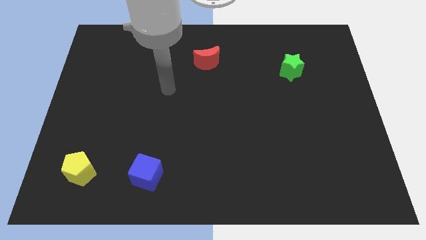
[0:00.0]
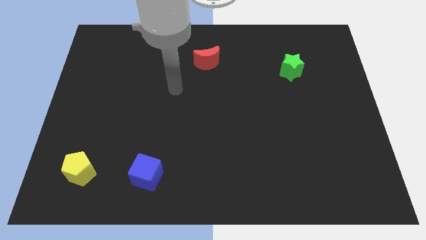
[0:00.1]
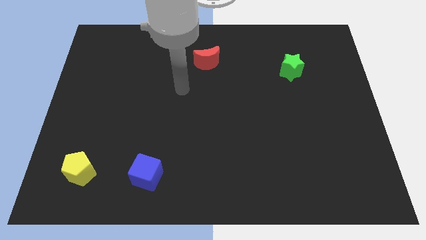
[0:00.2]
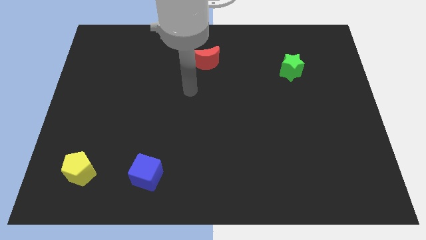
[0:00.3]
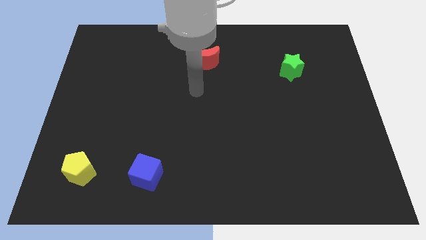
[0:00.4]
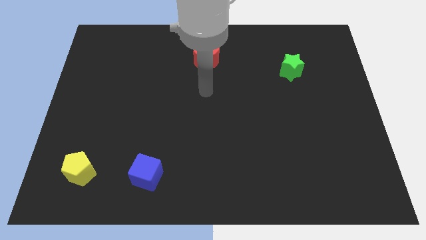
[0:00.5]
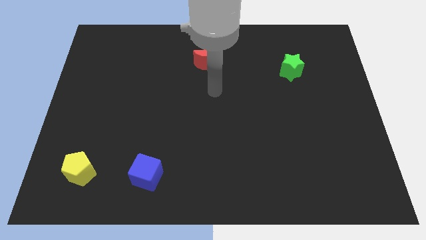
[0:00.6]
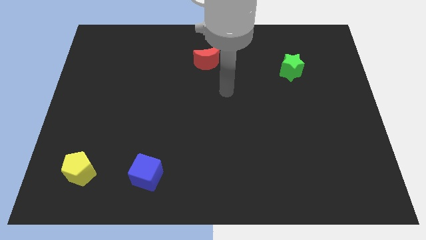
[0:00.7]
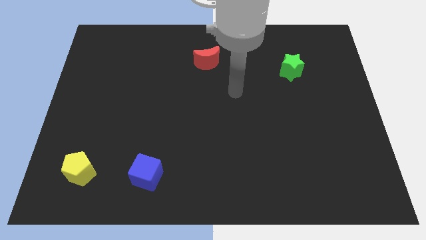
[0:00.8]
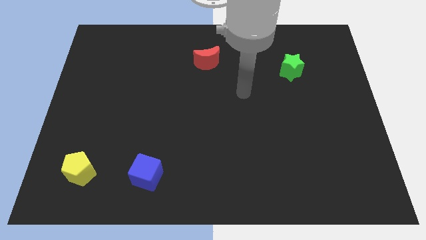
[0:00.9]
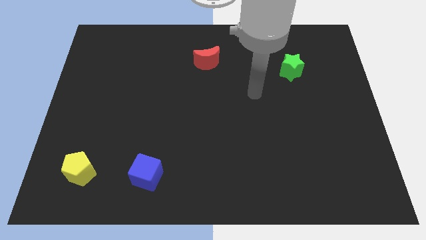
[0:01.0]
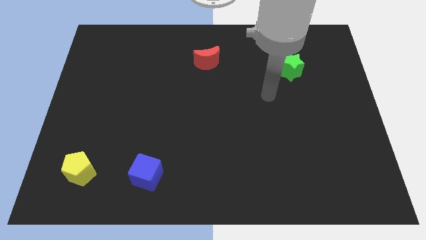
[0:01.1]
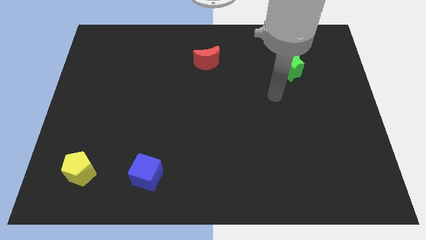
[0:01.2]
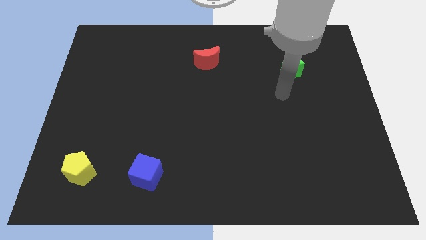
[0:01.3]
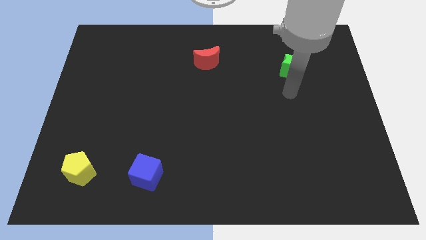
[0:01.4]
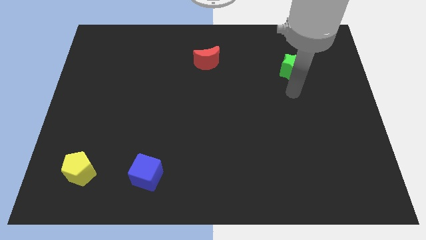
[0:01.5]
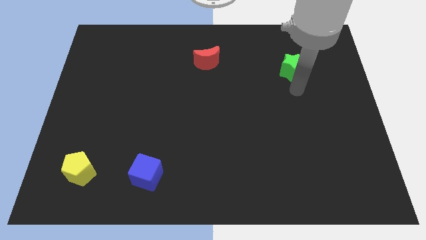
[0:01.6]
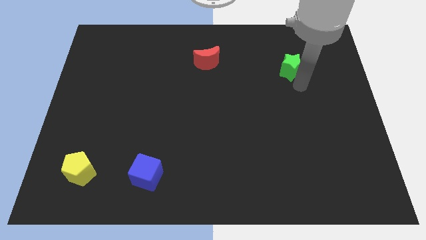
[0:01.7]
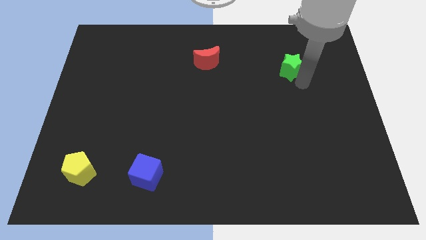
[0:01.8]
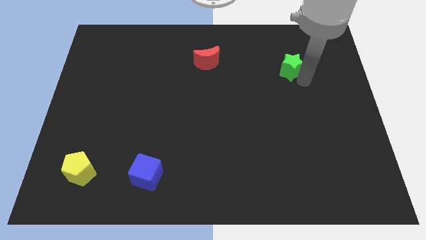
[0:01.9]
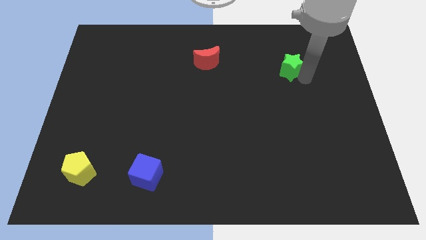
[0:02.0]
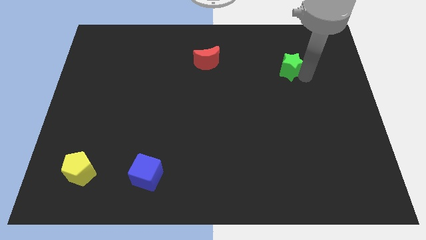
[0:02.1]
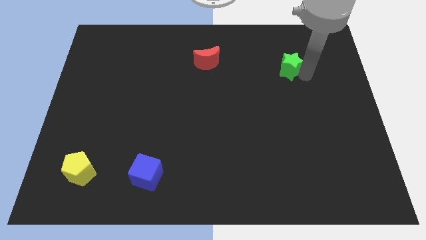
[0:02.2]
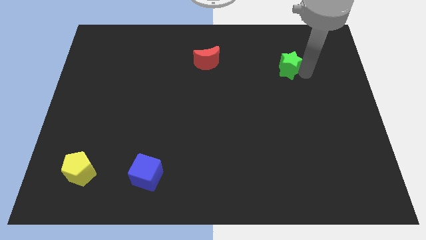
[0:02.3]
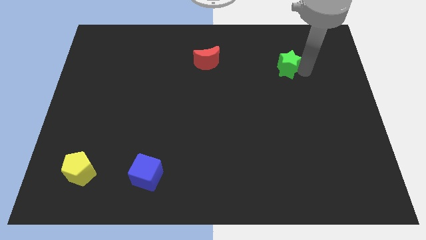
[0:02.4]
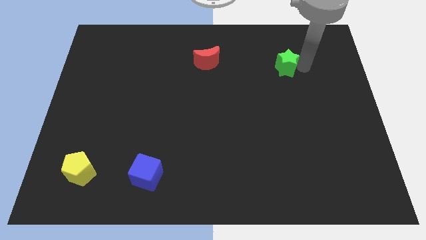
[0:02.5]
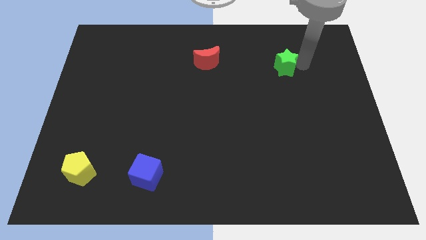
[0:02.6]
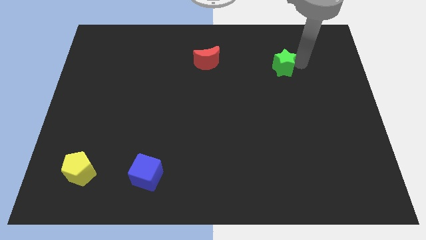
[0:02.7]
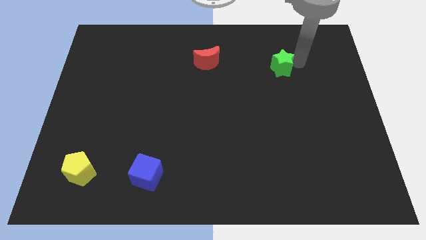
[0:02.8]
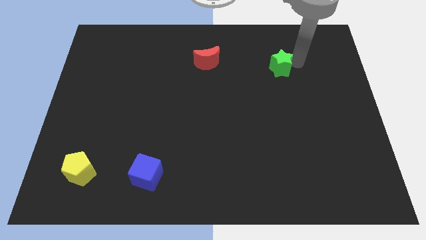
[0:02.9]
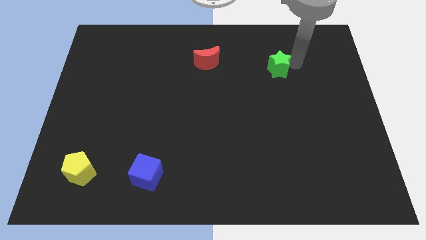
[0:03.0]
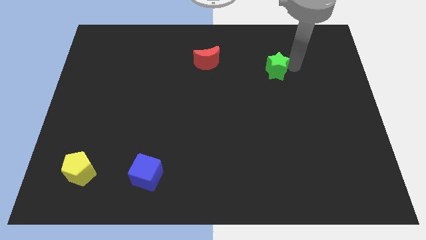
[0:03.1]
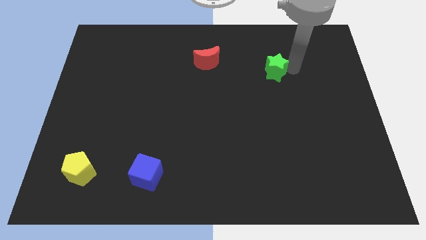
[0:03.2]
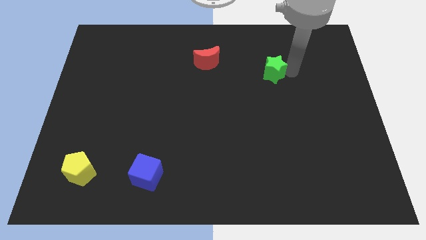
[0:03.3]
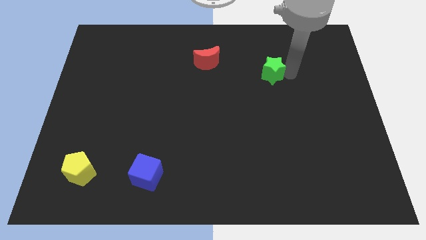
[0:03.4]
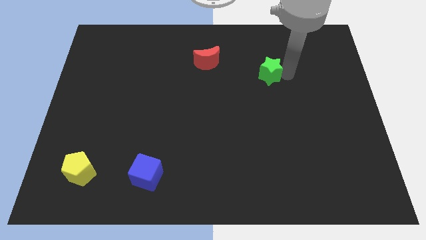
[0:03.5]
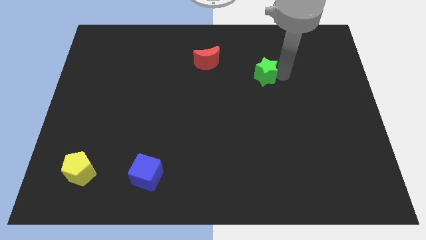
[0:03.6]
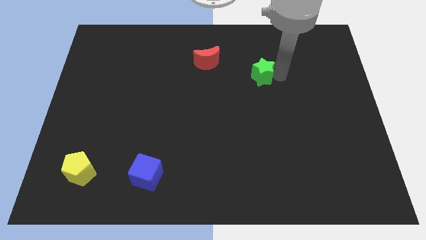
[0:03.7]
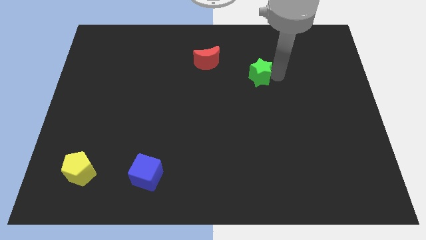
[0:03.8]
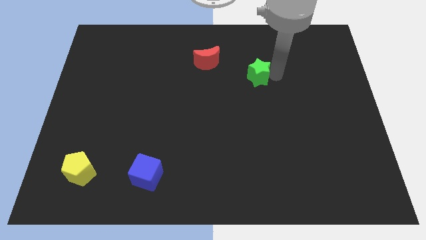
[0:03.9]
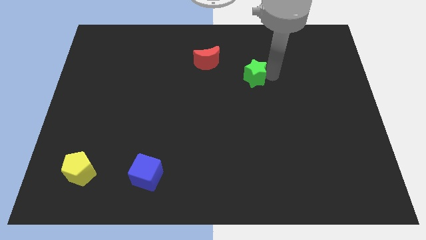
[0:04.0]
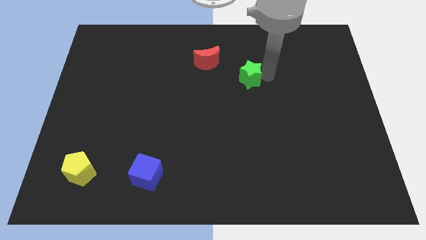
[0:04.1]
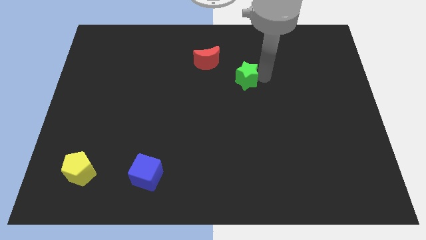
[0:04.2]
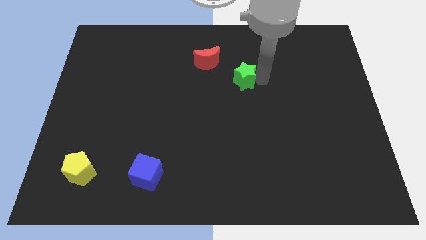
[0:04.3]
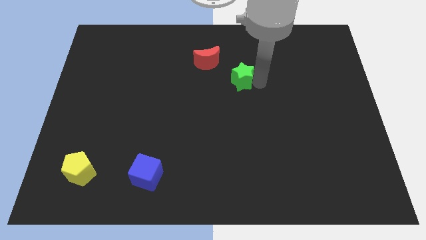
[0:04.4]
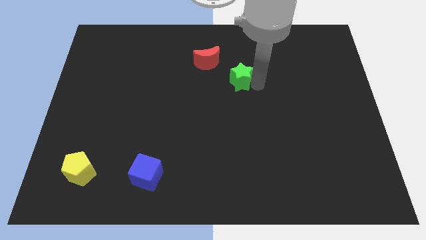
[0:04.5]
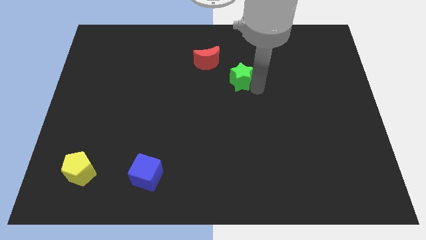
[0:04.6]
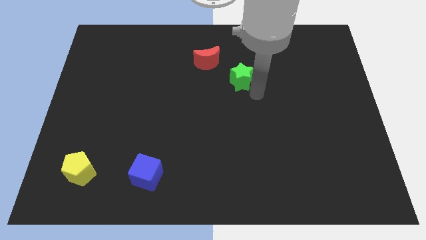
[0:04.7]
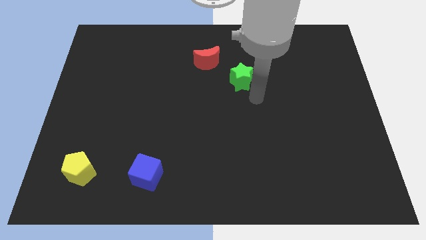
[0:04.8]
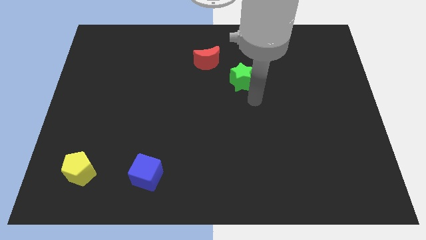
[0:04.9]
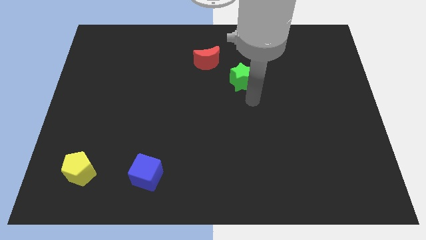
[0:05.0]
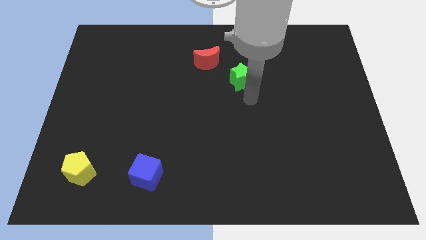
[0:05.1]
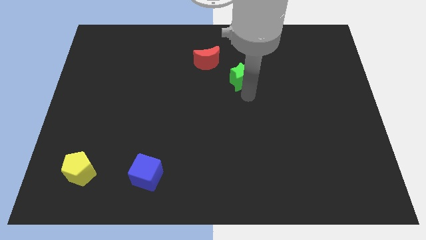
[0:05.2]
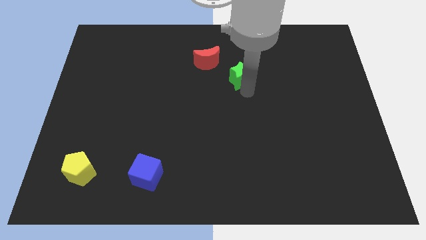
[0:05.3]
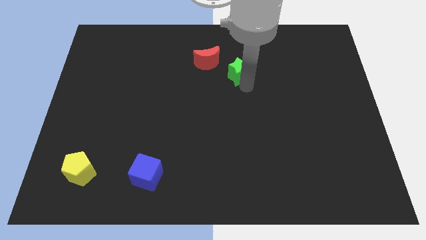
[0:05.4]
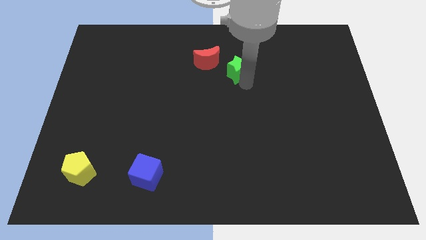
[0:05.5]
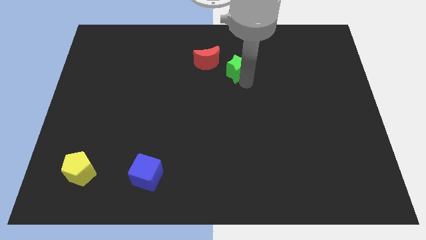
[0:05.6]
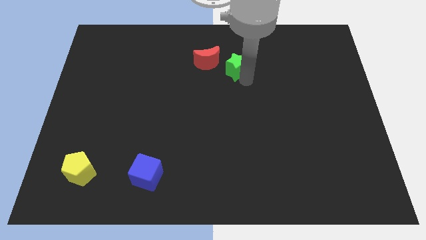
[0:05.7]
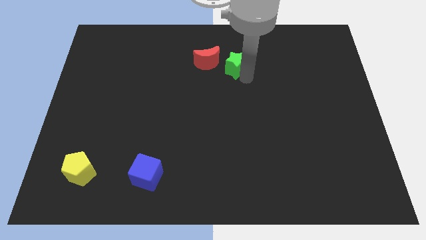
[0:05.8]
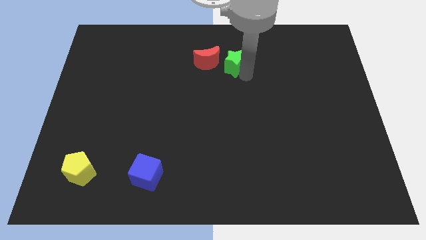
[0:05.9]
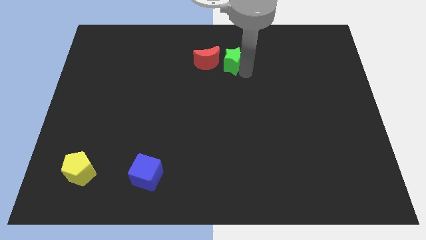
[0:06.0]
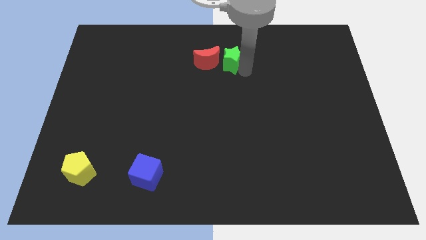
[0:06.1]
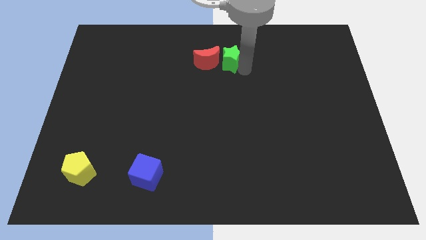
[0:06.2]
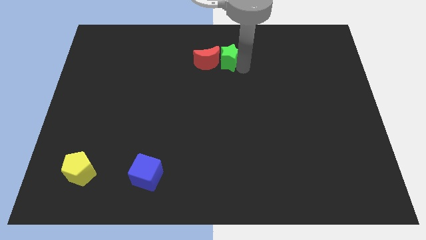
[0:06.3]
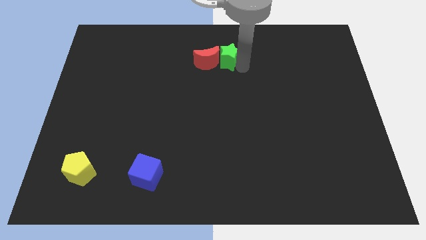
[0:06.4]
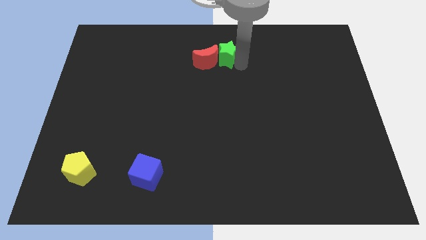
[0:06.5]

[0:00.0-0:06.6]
push the green star towards the red moon

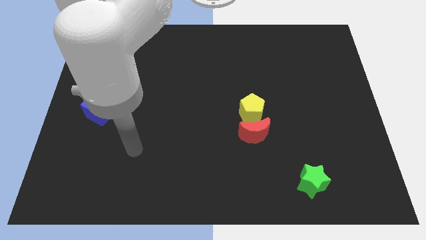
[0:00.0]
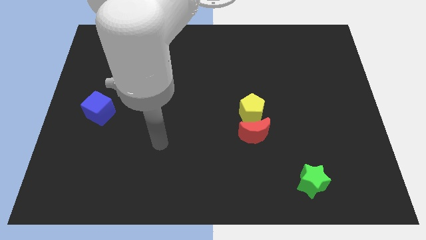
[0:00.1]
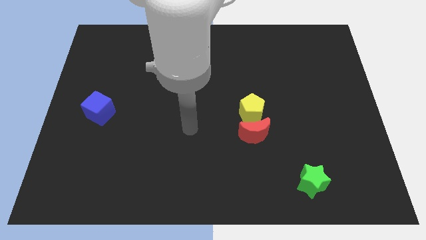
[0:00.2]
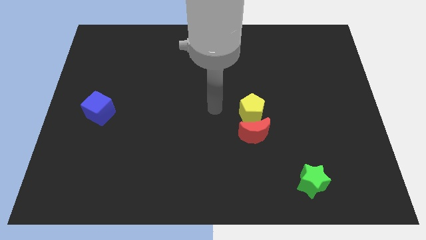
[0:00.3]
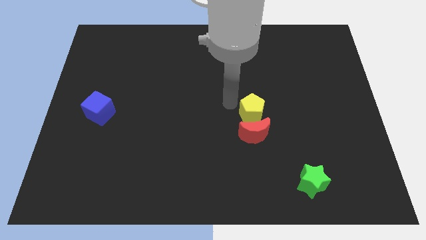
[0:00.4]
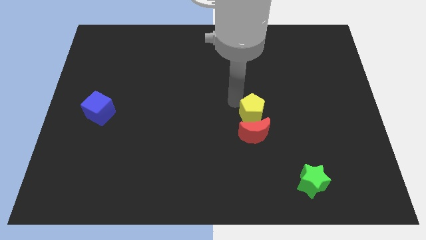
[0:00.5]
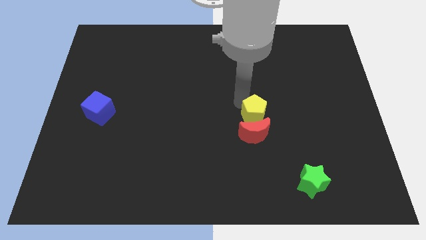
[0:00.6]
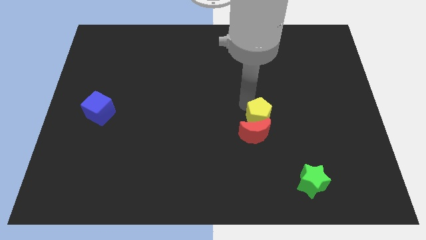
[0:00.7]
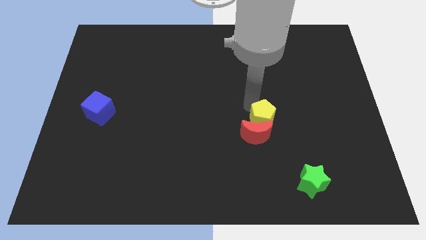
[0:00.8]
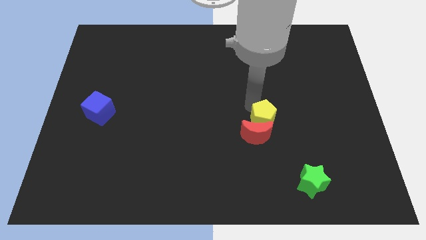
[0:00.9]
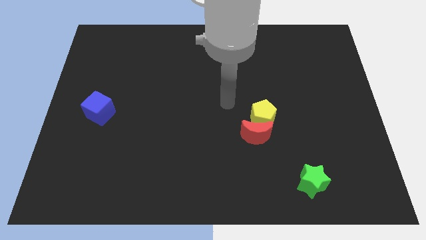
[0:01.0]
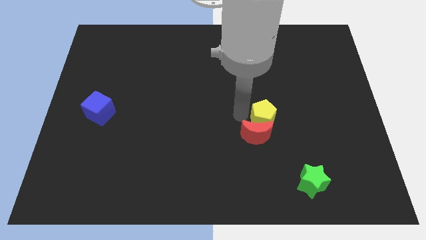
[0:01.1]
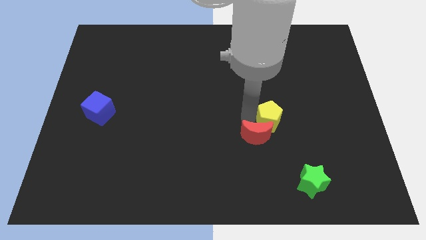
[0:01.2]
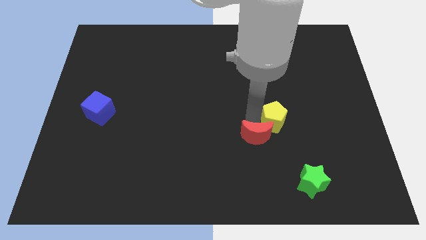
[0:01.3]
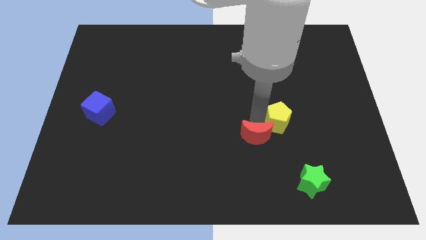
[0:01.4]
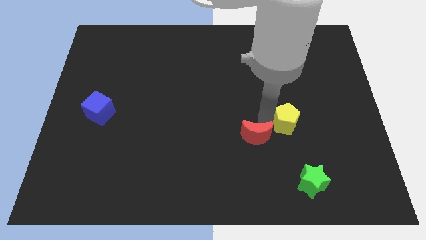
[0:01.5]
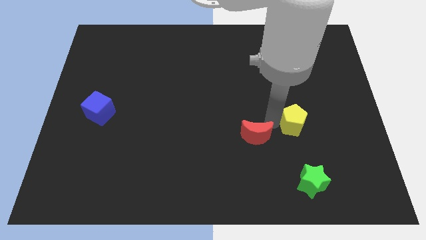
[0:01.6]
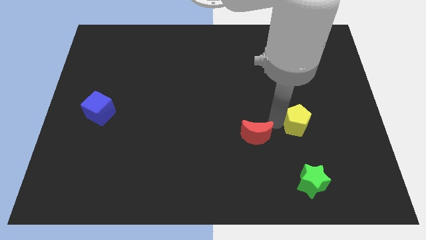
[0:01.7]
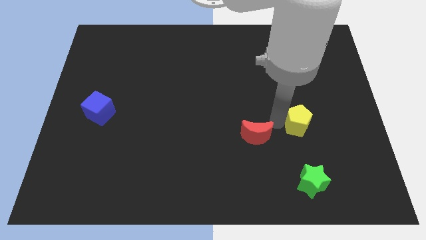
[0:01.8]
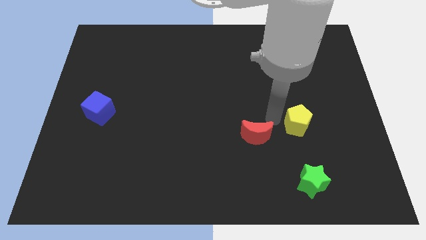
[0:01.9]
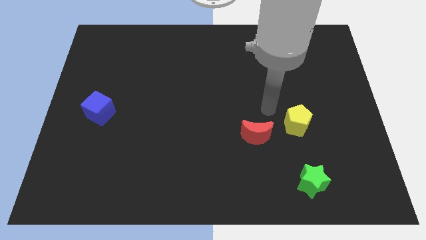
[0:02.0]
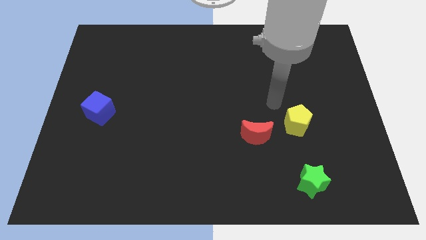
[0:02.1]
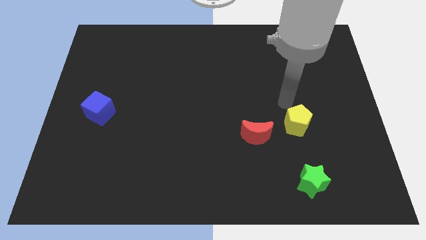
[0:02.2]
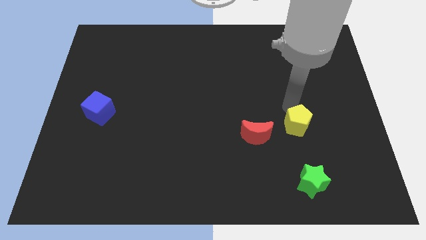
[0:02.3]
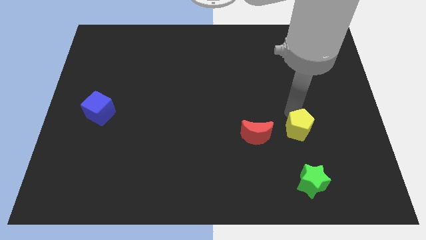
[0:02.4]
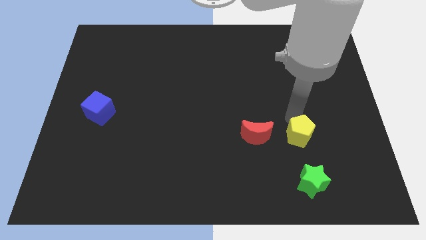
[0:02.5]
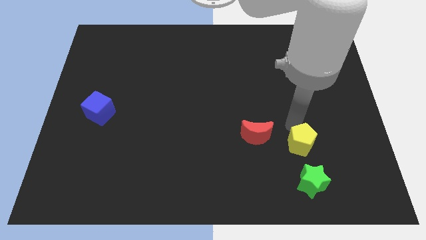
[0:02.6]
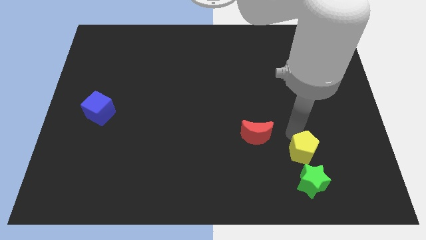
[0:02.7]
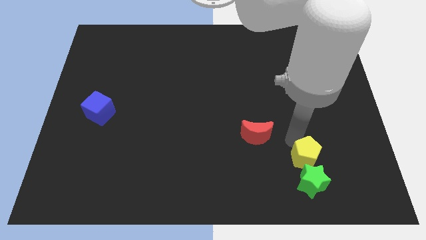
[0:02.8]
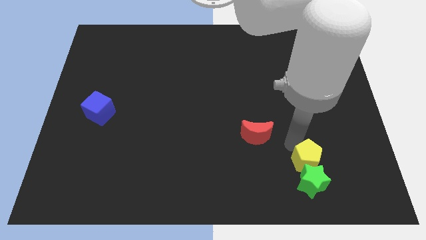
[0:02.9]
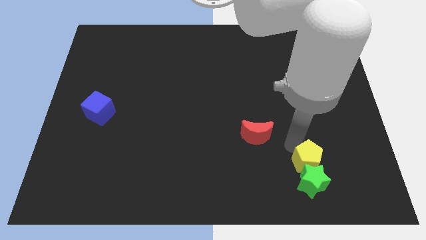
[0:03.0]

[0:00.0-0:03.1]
move the pentagon to the green block
